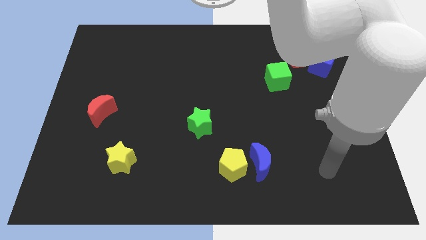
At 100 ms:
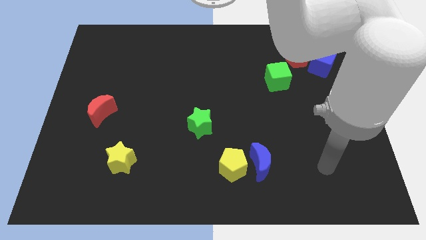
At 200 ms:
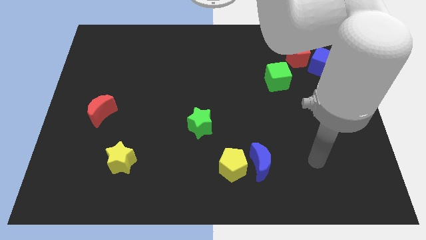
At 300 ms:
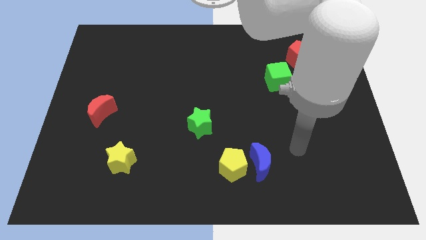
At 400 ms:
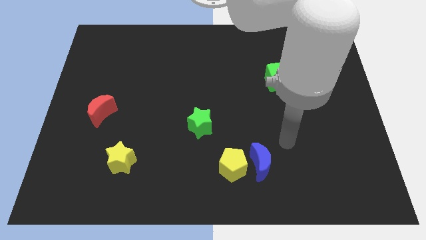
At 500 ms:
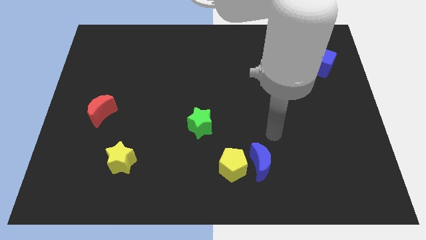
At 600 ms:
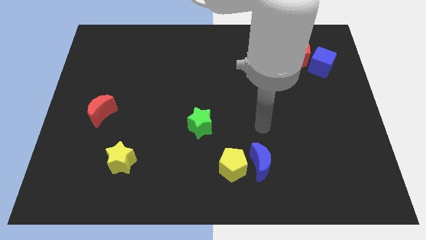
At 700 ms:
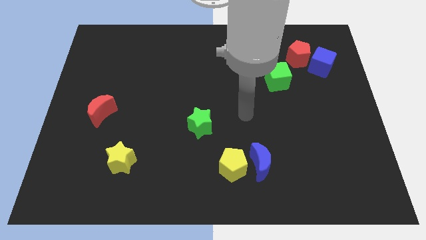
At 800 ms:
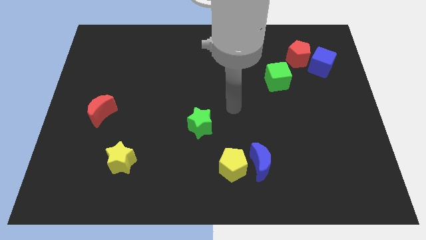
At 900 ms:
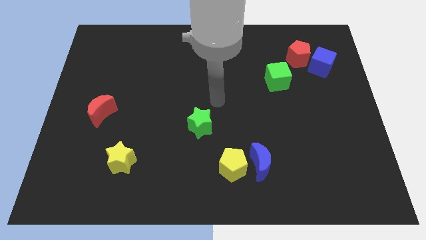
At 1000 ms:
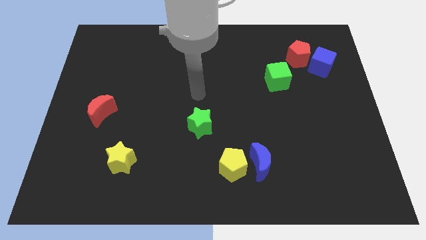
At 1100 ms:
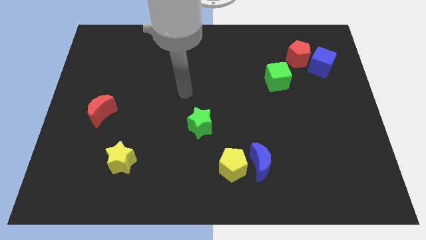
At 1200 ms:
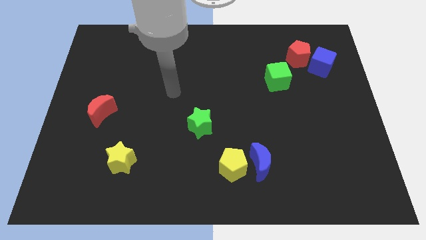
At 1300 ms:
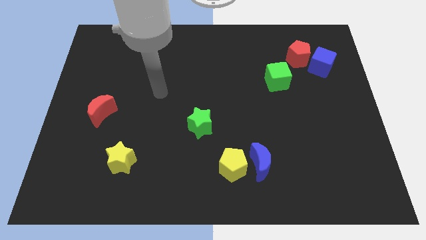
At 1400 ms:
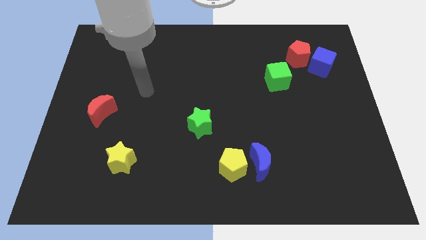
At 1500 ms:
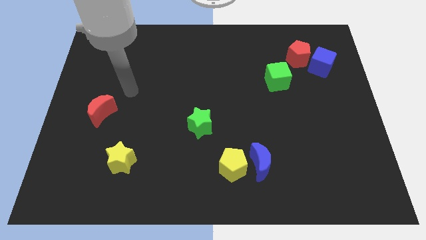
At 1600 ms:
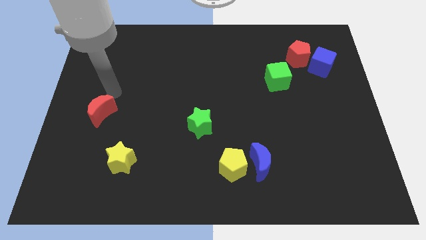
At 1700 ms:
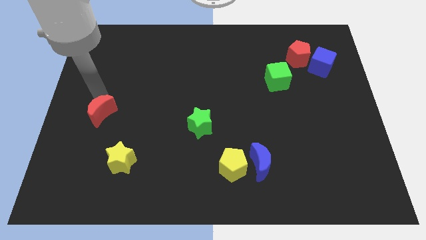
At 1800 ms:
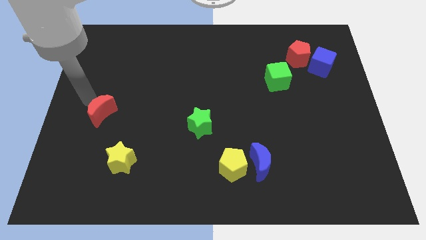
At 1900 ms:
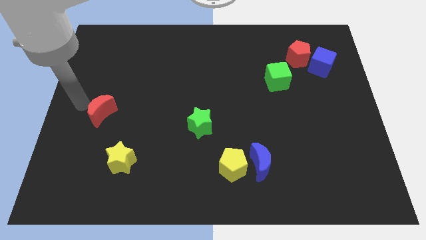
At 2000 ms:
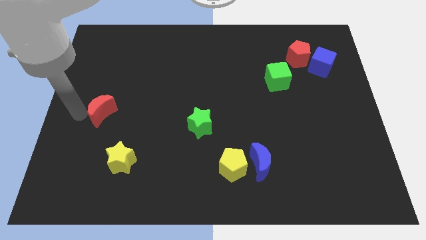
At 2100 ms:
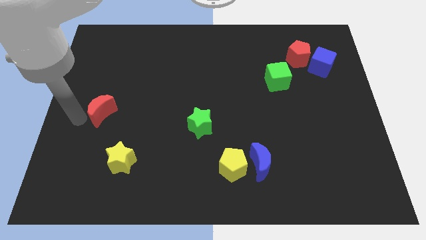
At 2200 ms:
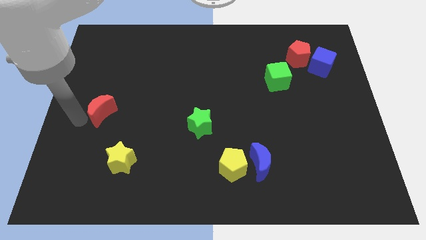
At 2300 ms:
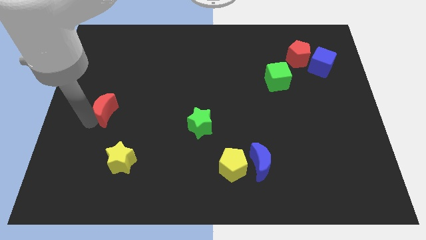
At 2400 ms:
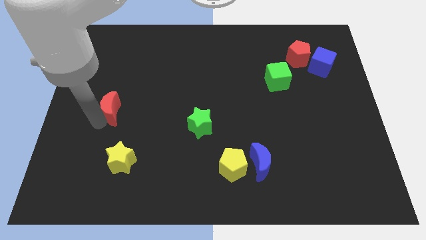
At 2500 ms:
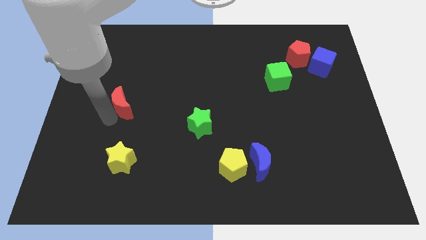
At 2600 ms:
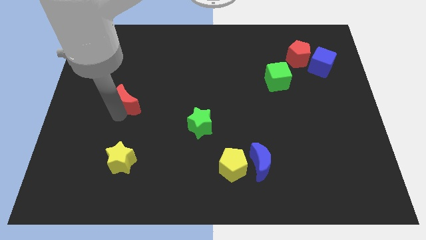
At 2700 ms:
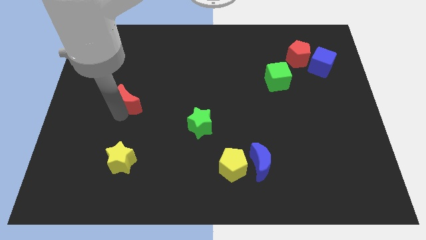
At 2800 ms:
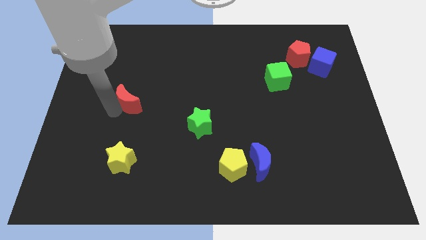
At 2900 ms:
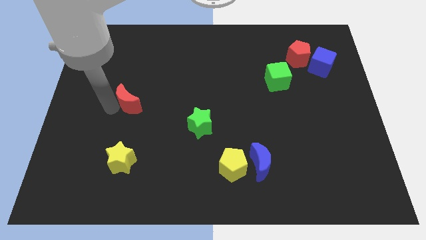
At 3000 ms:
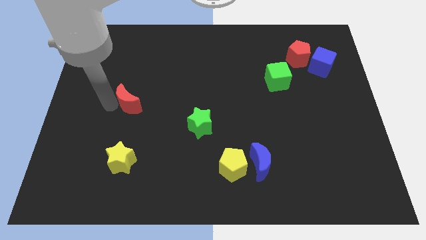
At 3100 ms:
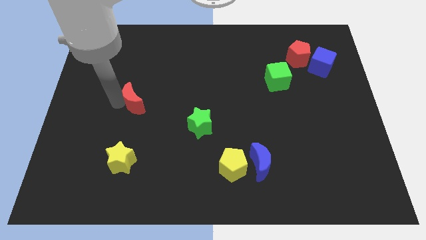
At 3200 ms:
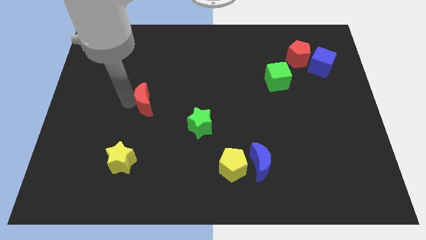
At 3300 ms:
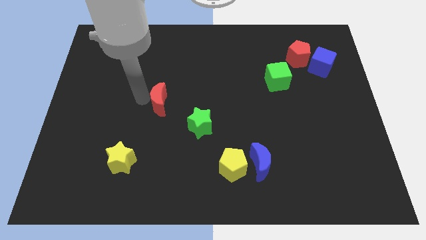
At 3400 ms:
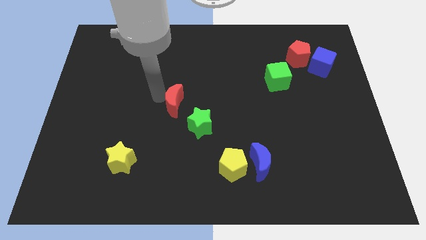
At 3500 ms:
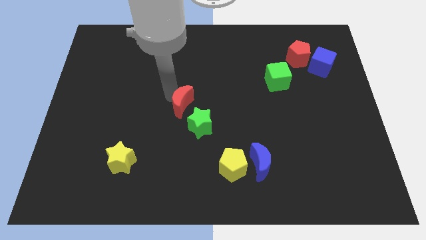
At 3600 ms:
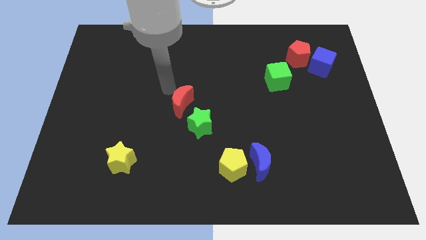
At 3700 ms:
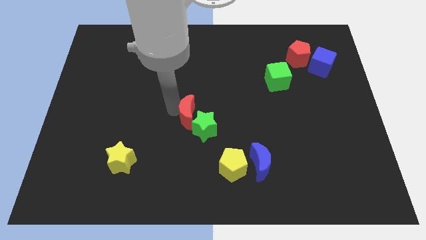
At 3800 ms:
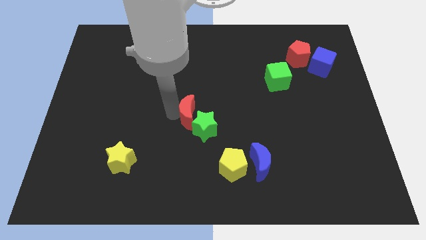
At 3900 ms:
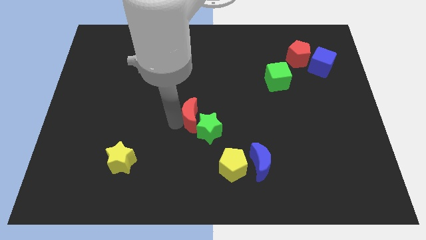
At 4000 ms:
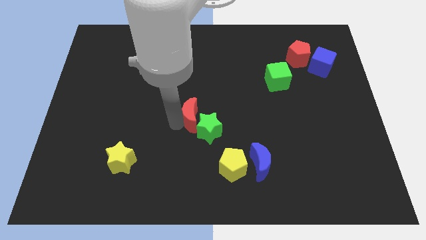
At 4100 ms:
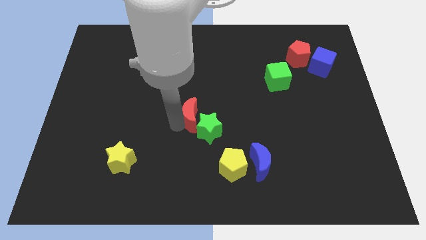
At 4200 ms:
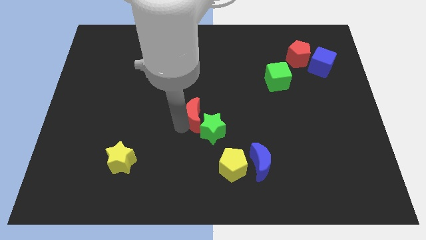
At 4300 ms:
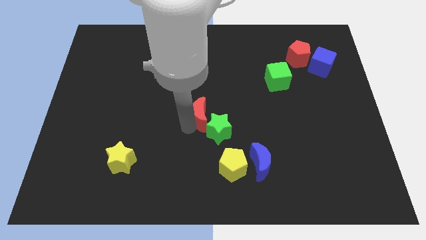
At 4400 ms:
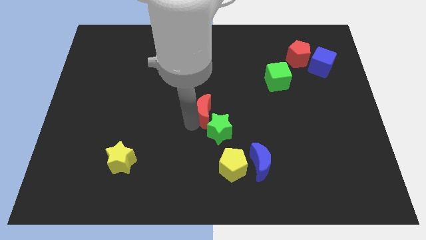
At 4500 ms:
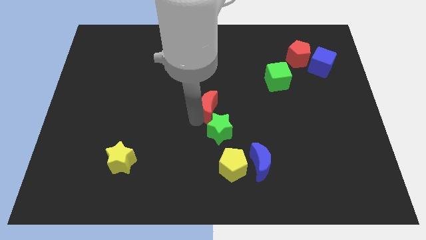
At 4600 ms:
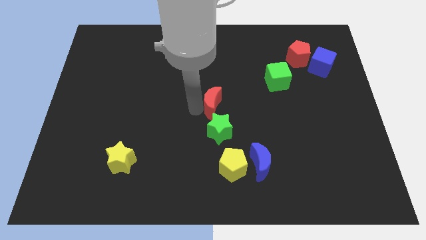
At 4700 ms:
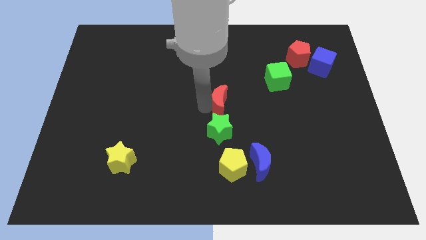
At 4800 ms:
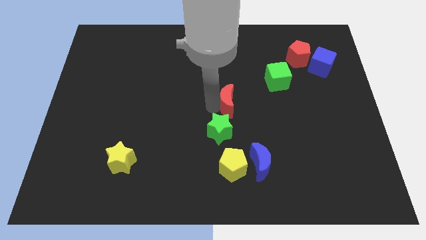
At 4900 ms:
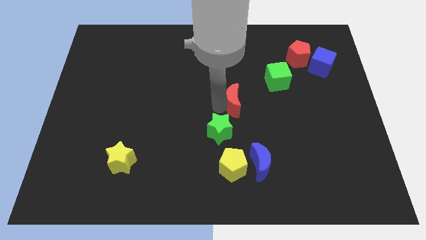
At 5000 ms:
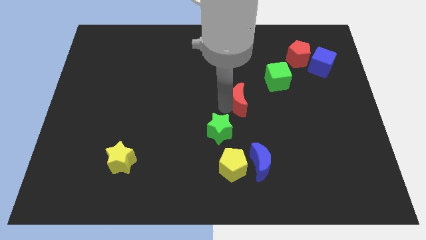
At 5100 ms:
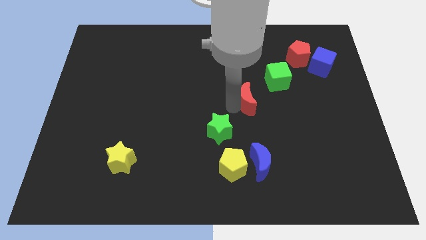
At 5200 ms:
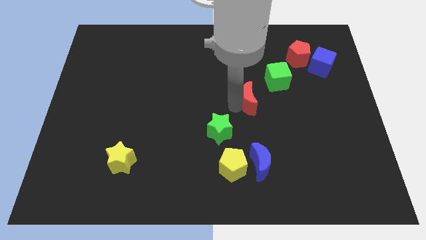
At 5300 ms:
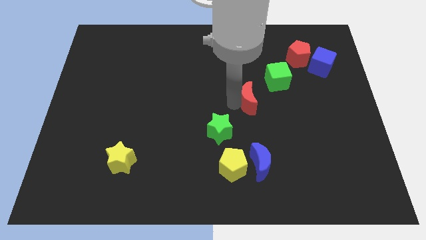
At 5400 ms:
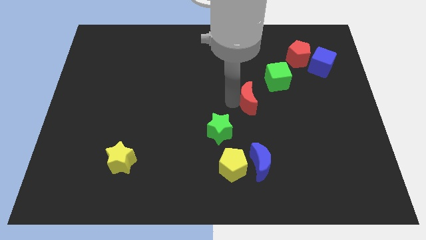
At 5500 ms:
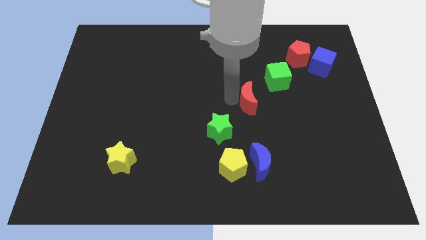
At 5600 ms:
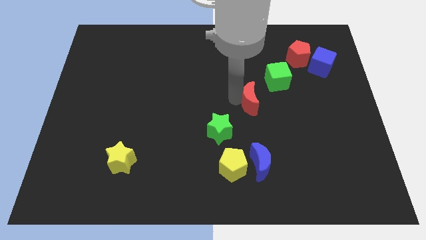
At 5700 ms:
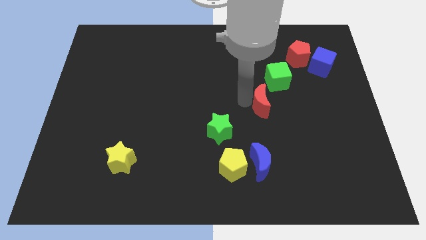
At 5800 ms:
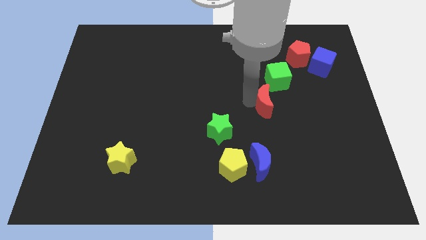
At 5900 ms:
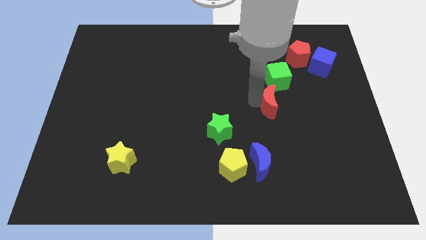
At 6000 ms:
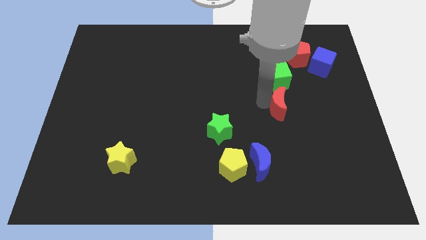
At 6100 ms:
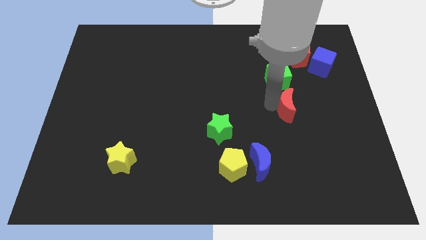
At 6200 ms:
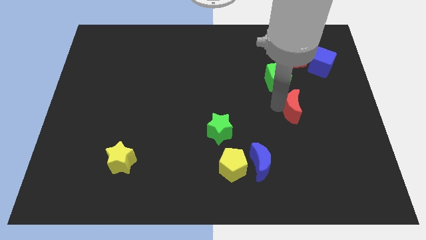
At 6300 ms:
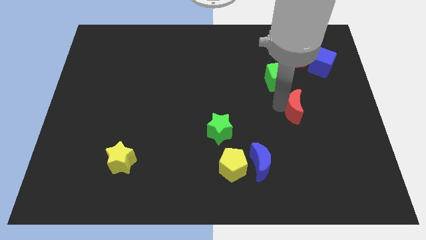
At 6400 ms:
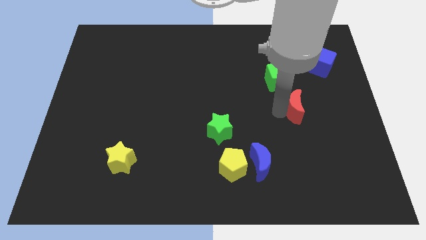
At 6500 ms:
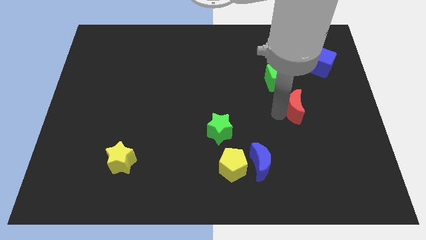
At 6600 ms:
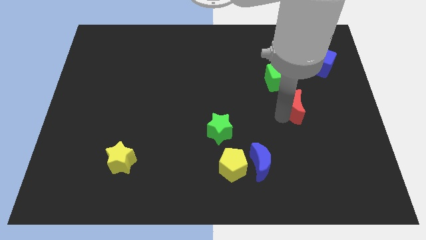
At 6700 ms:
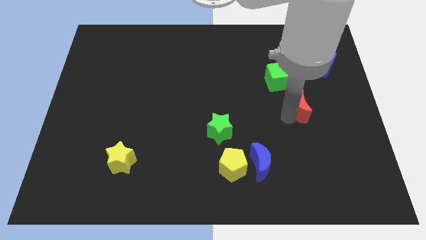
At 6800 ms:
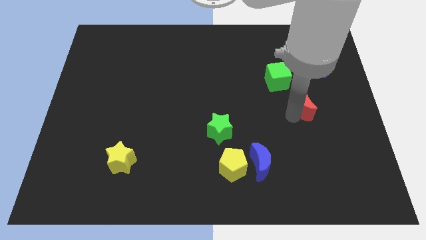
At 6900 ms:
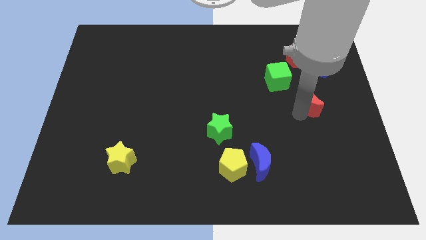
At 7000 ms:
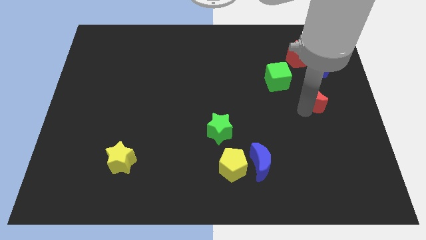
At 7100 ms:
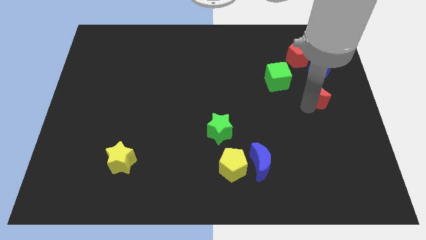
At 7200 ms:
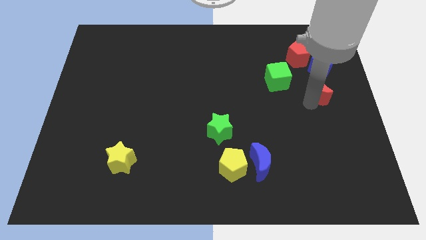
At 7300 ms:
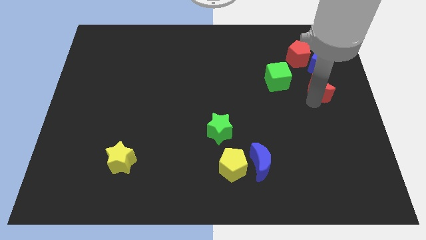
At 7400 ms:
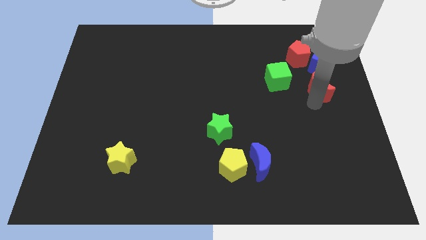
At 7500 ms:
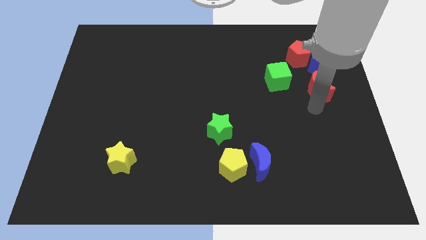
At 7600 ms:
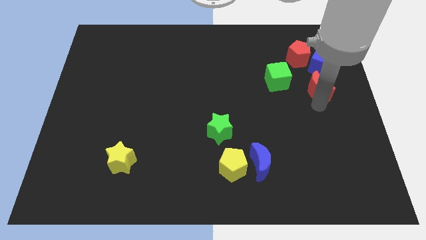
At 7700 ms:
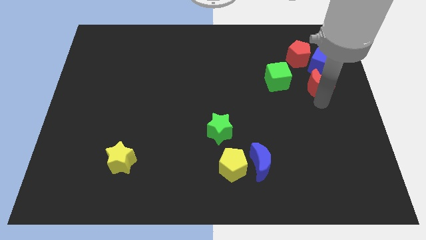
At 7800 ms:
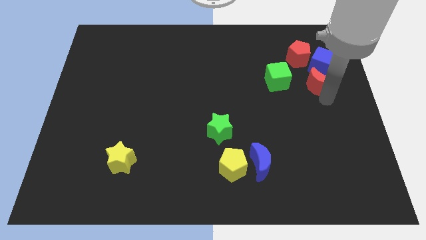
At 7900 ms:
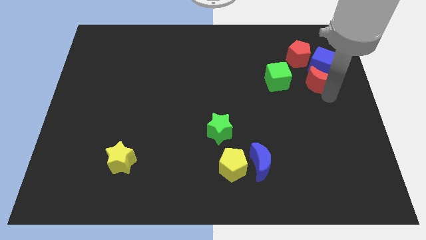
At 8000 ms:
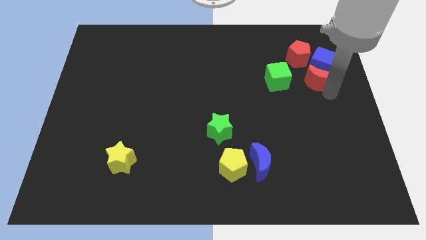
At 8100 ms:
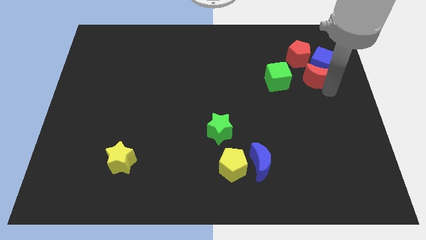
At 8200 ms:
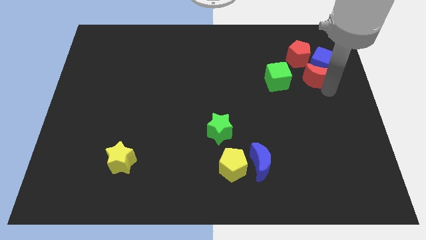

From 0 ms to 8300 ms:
move the red moon next to the blue cube
